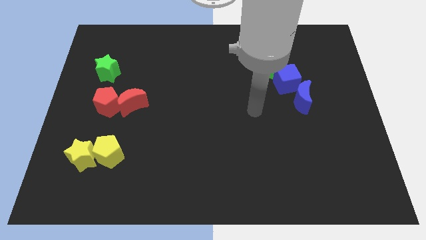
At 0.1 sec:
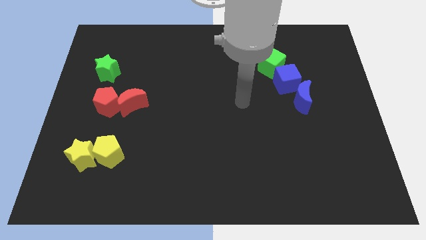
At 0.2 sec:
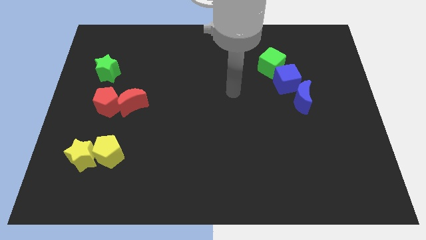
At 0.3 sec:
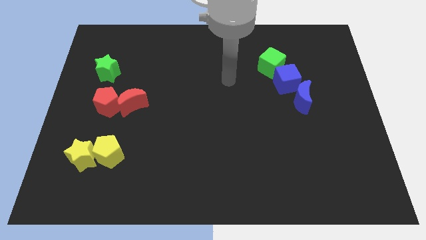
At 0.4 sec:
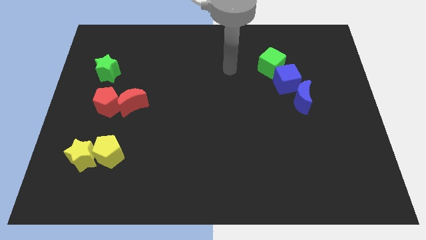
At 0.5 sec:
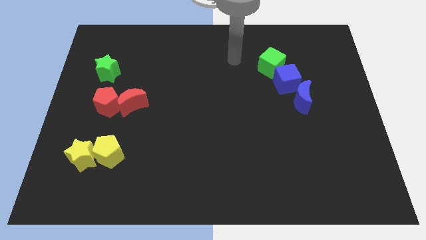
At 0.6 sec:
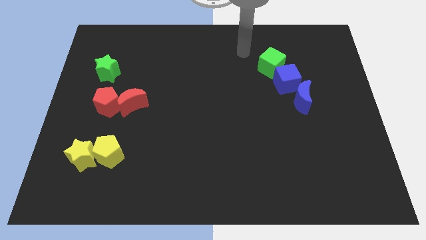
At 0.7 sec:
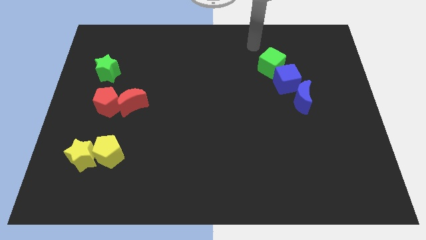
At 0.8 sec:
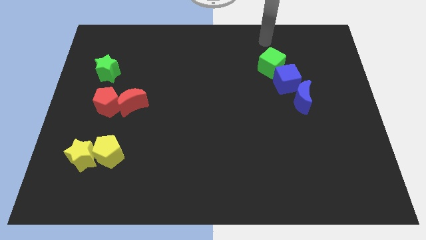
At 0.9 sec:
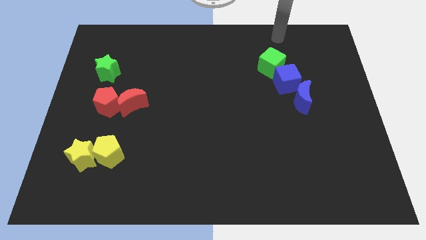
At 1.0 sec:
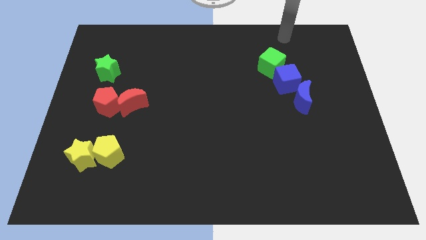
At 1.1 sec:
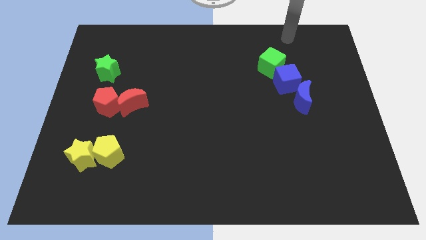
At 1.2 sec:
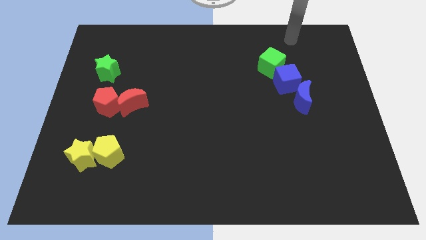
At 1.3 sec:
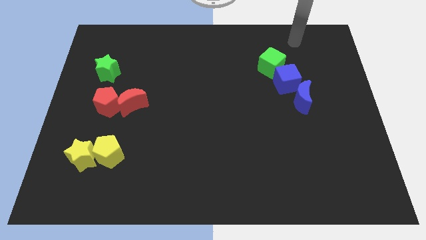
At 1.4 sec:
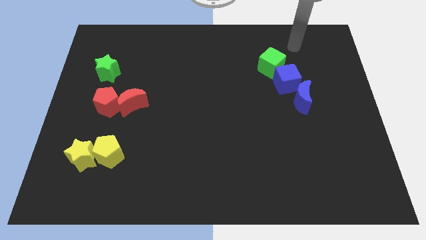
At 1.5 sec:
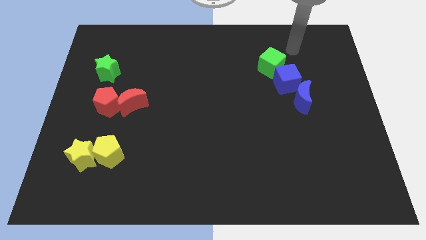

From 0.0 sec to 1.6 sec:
move your arm towards the top right

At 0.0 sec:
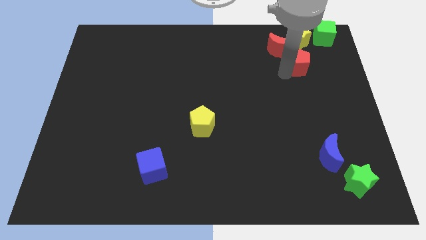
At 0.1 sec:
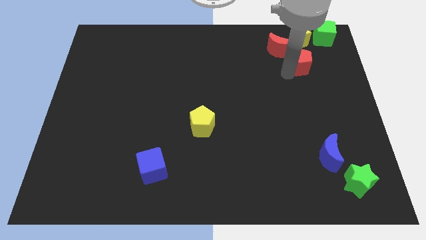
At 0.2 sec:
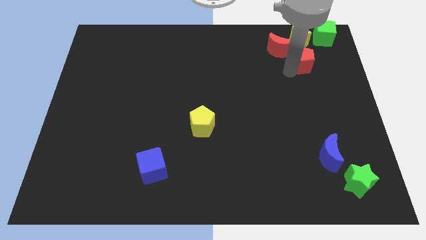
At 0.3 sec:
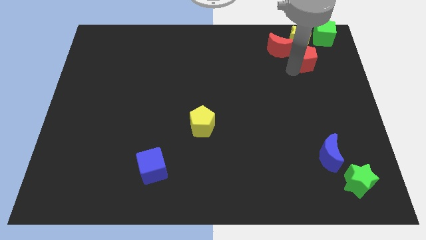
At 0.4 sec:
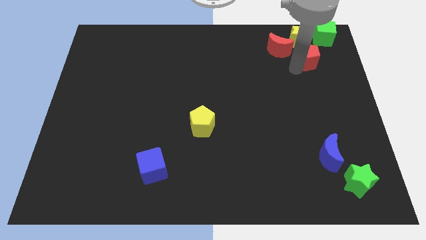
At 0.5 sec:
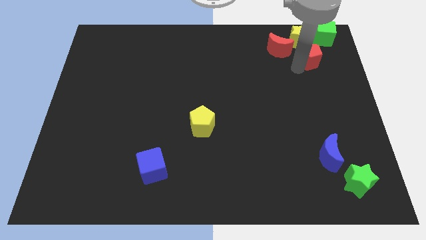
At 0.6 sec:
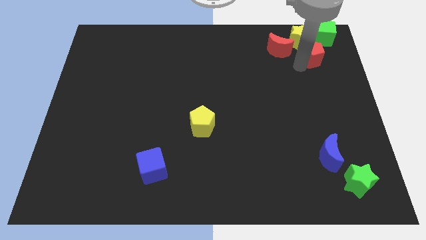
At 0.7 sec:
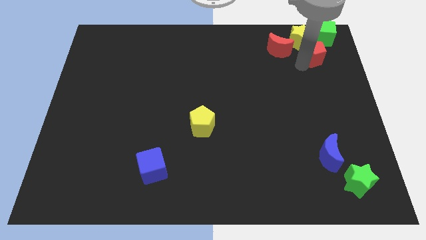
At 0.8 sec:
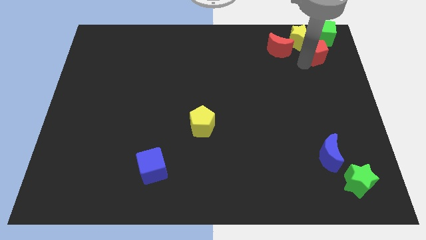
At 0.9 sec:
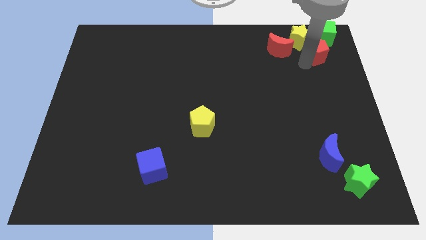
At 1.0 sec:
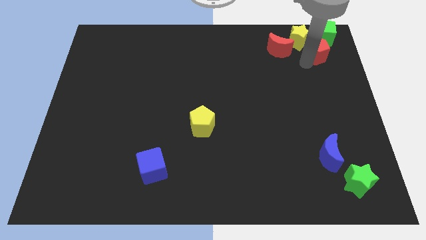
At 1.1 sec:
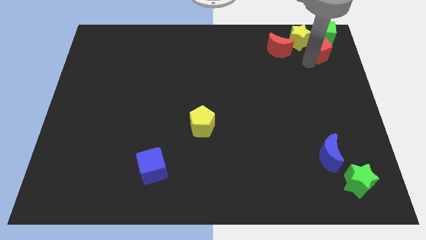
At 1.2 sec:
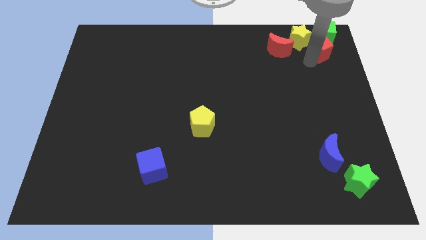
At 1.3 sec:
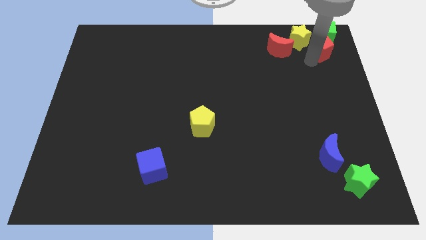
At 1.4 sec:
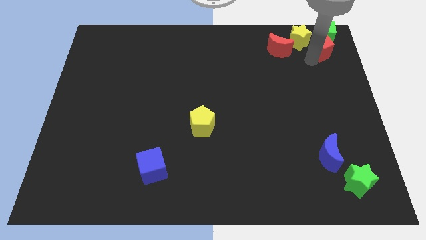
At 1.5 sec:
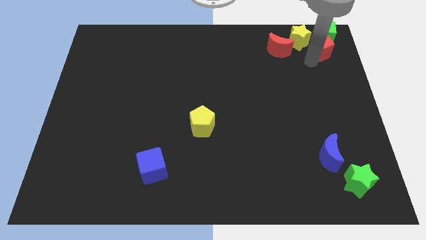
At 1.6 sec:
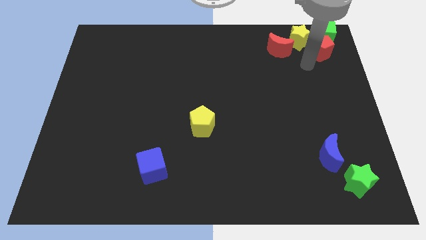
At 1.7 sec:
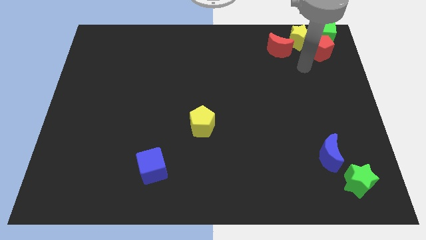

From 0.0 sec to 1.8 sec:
place the red pentagon below the green cube

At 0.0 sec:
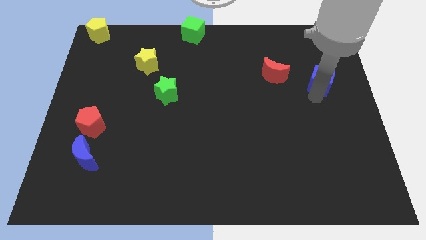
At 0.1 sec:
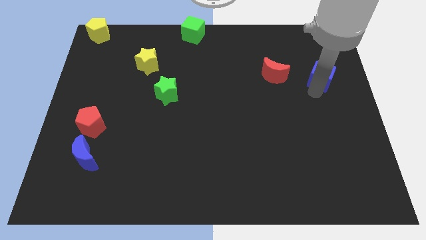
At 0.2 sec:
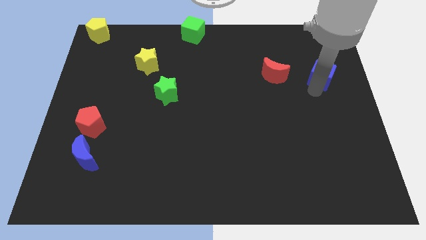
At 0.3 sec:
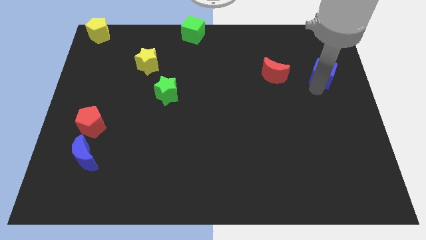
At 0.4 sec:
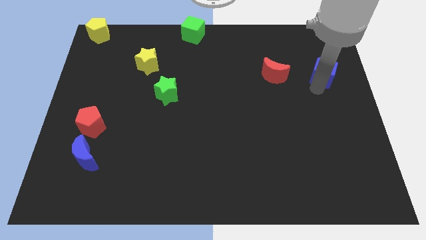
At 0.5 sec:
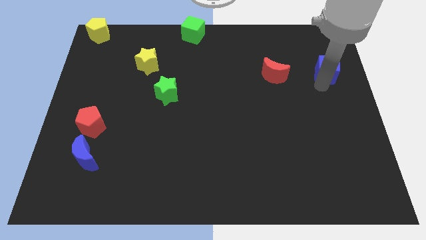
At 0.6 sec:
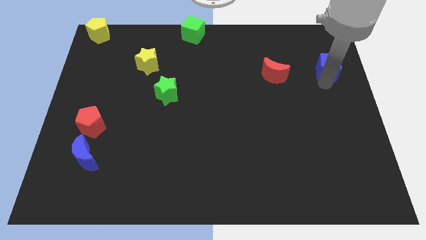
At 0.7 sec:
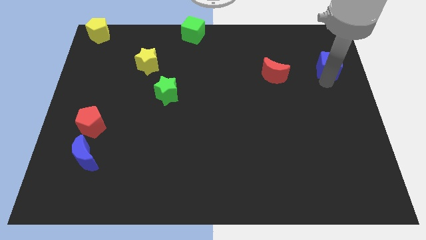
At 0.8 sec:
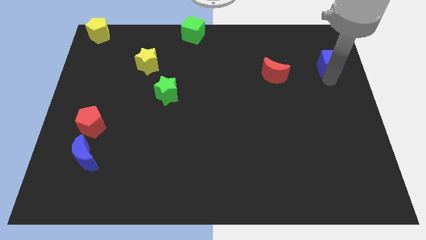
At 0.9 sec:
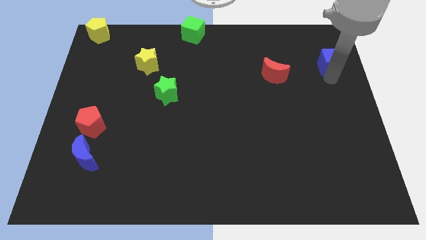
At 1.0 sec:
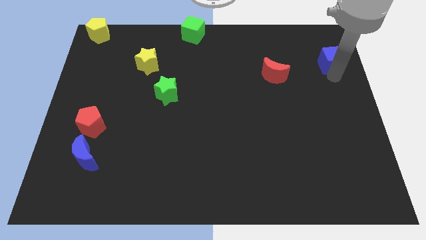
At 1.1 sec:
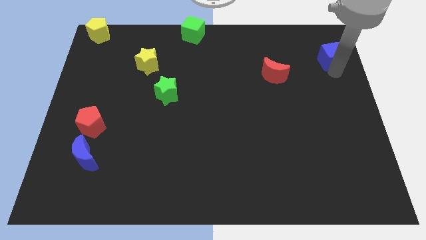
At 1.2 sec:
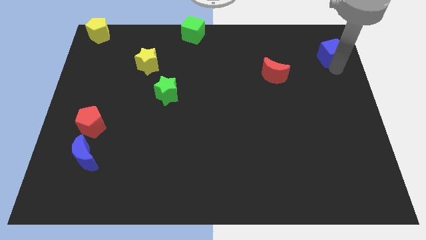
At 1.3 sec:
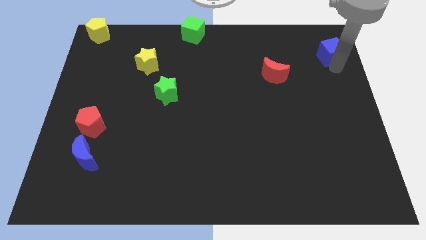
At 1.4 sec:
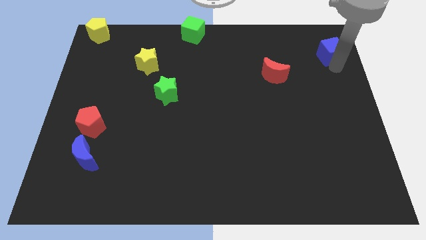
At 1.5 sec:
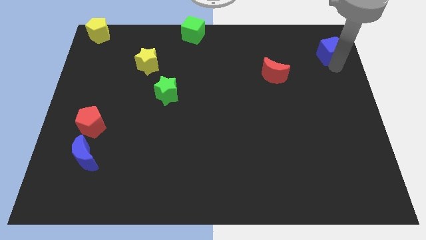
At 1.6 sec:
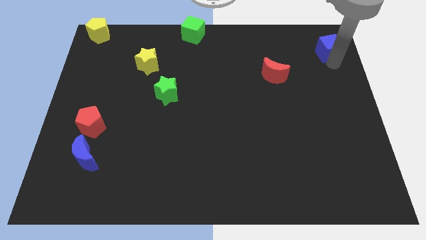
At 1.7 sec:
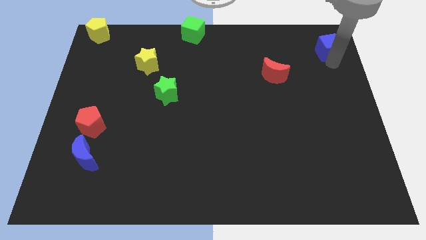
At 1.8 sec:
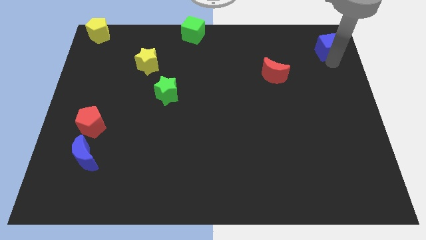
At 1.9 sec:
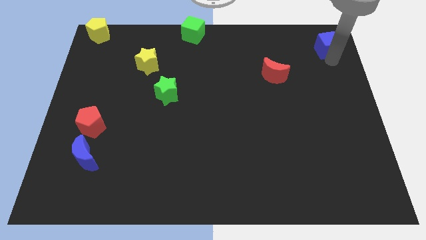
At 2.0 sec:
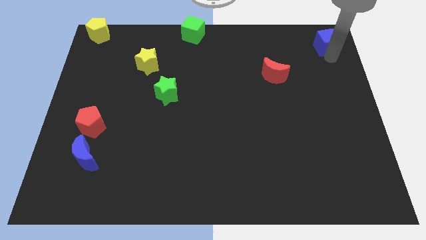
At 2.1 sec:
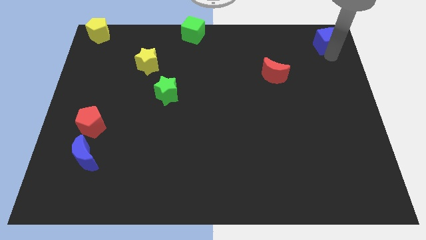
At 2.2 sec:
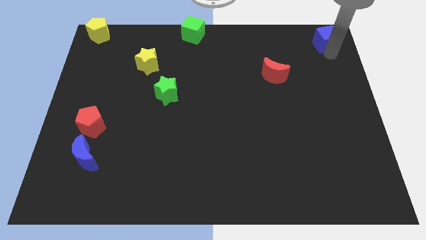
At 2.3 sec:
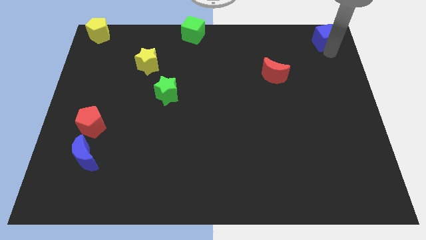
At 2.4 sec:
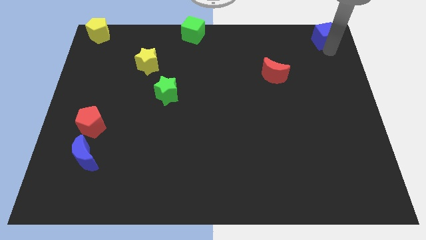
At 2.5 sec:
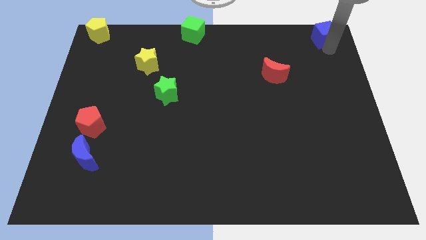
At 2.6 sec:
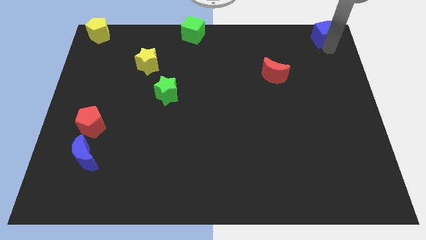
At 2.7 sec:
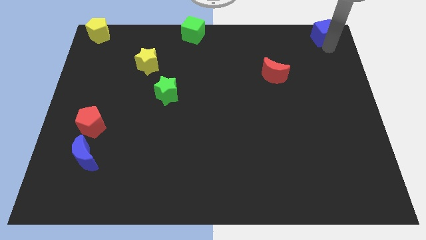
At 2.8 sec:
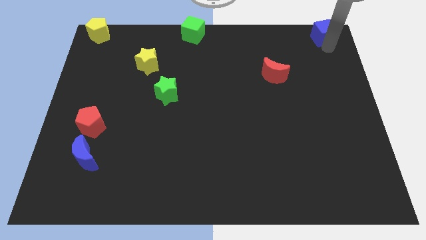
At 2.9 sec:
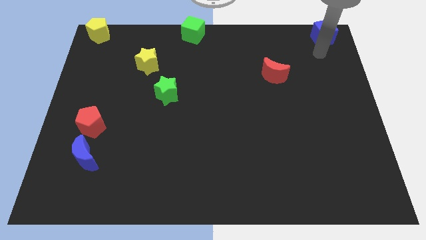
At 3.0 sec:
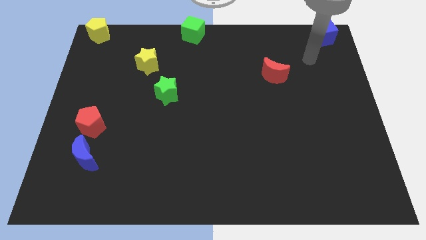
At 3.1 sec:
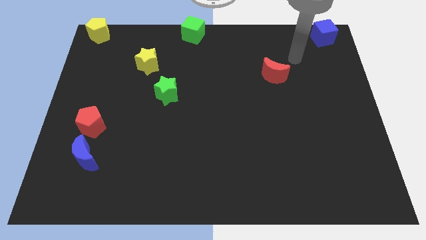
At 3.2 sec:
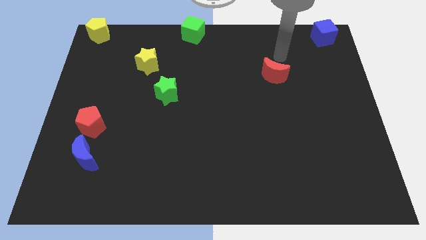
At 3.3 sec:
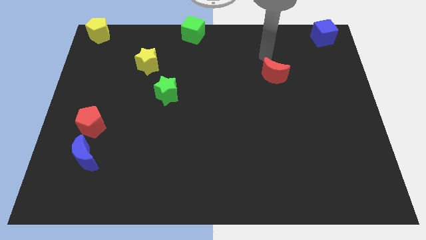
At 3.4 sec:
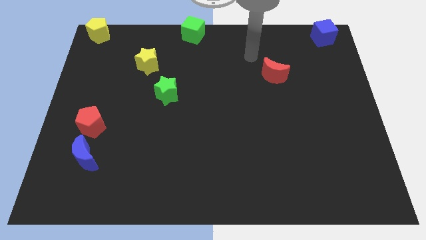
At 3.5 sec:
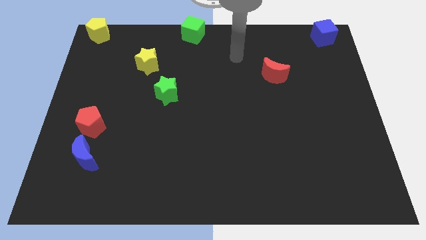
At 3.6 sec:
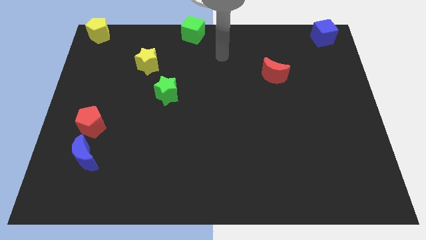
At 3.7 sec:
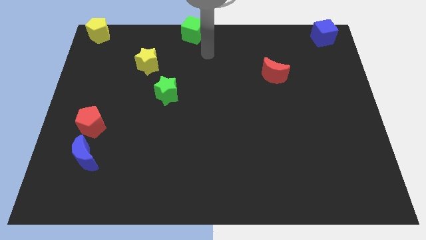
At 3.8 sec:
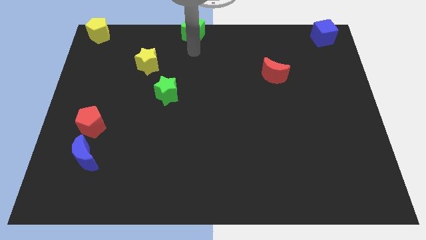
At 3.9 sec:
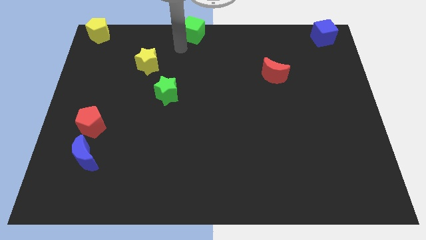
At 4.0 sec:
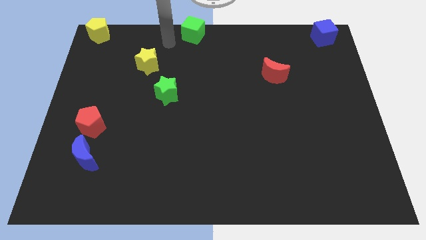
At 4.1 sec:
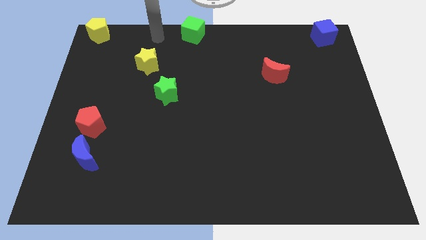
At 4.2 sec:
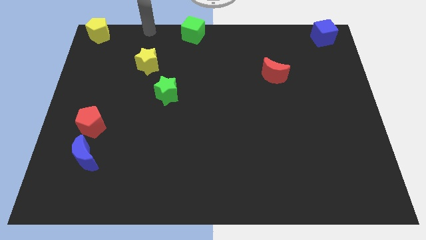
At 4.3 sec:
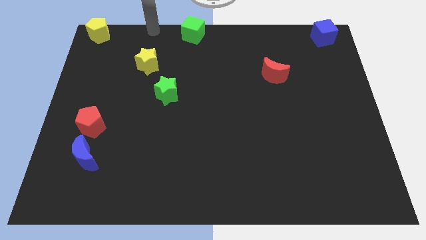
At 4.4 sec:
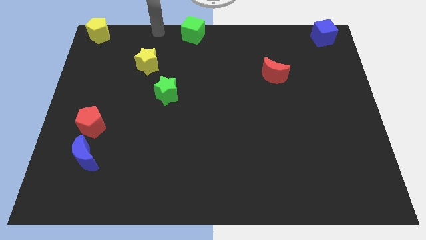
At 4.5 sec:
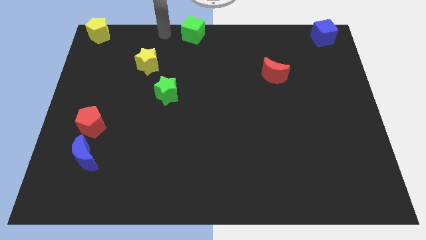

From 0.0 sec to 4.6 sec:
drag the blue cube to the top right

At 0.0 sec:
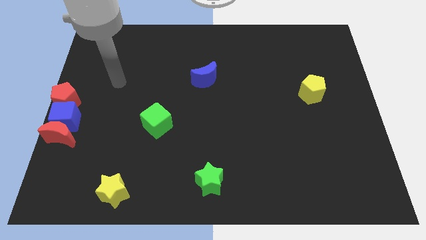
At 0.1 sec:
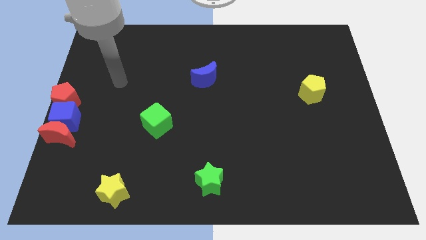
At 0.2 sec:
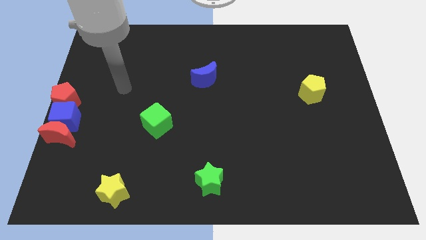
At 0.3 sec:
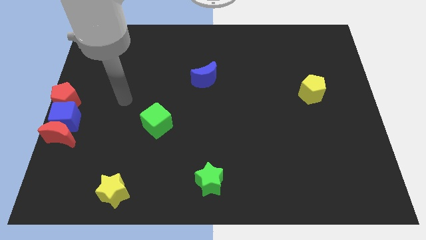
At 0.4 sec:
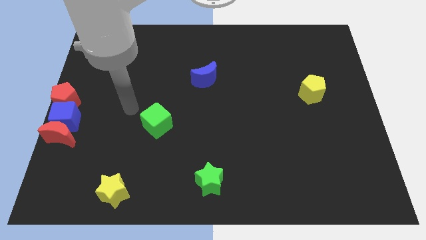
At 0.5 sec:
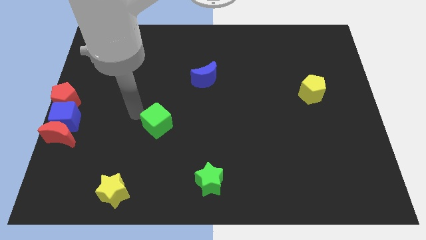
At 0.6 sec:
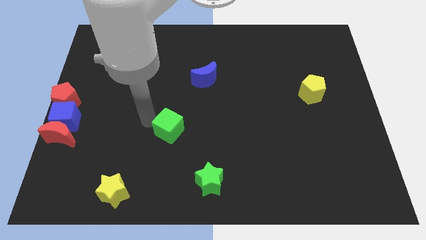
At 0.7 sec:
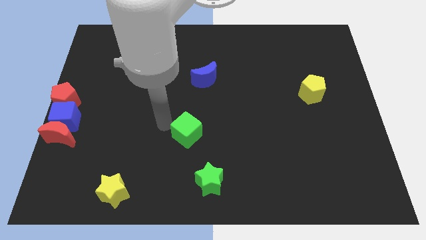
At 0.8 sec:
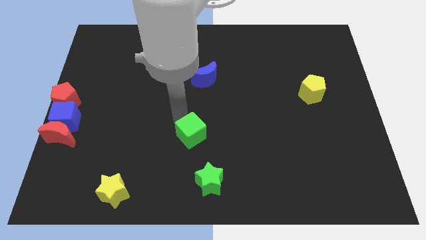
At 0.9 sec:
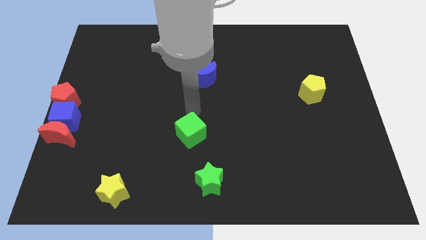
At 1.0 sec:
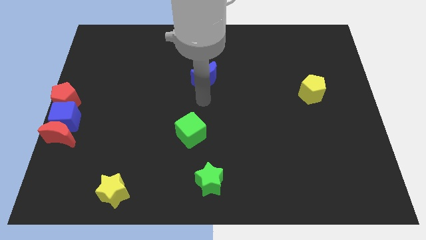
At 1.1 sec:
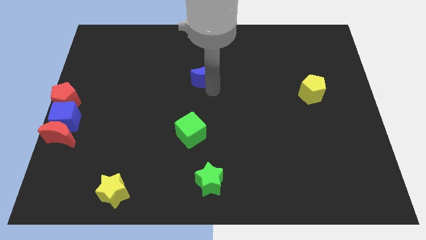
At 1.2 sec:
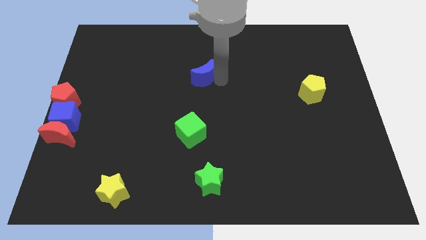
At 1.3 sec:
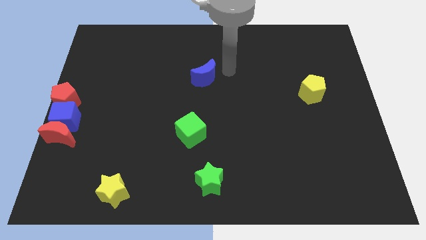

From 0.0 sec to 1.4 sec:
move green cube left above the green star
